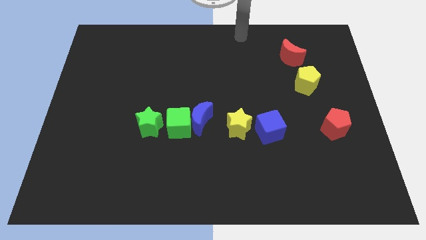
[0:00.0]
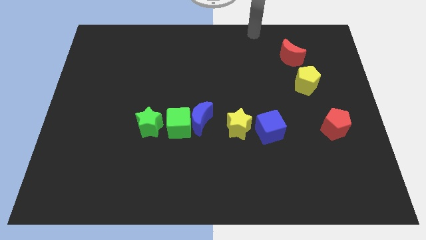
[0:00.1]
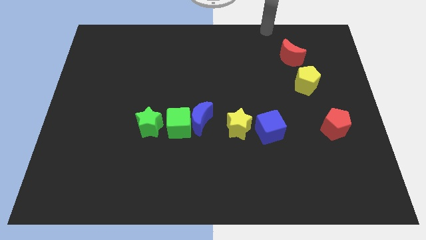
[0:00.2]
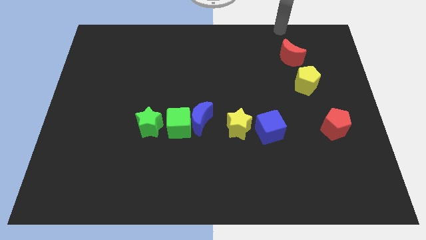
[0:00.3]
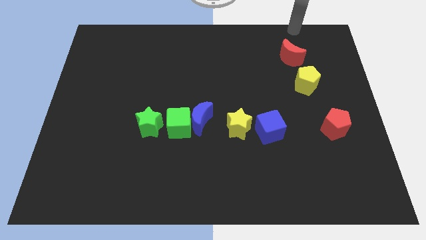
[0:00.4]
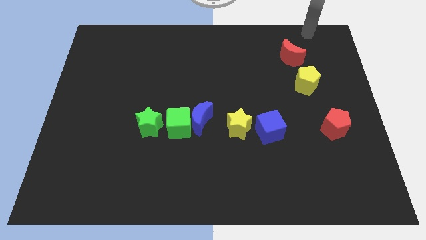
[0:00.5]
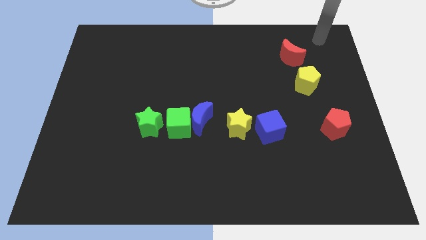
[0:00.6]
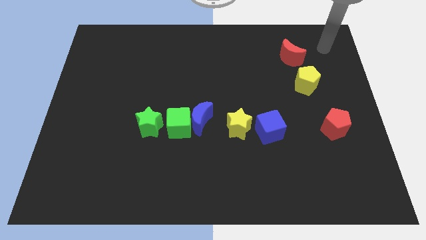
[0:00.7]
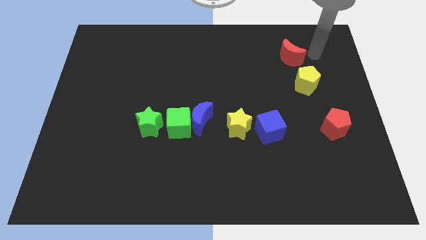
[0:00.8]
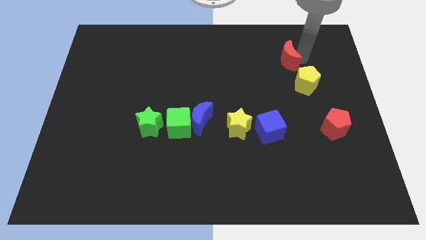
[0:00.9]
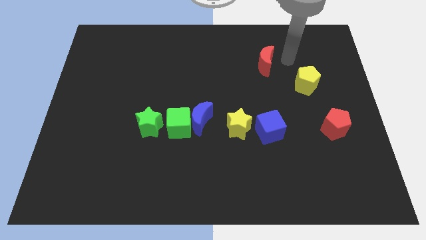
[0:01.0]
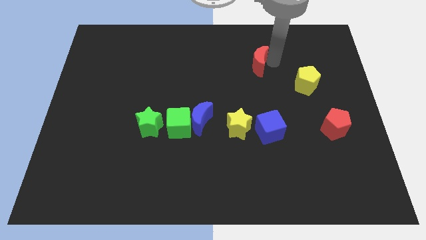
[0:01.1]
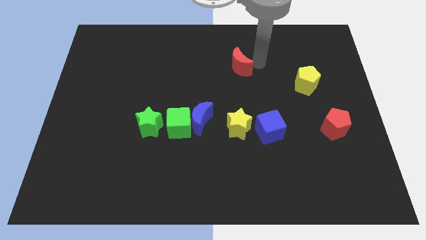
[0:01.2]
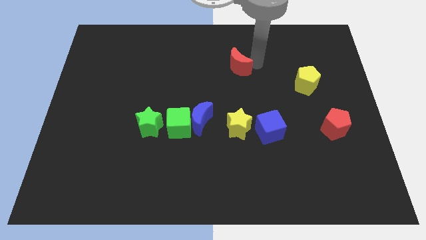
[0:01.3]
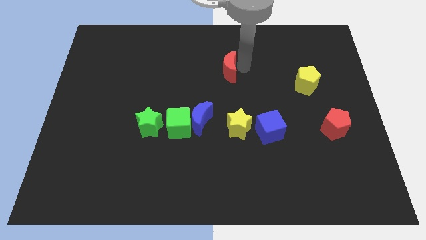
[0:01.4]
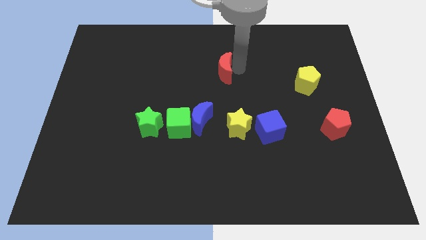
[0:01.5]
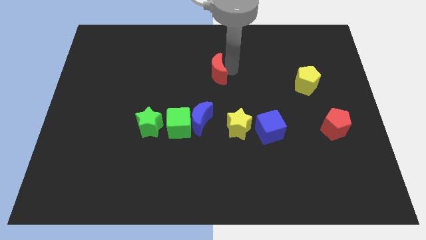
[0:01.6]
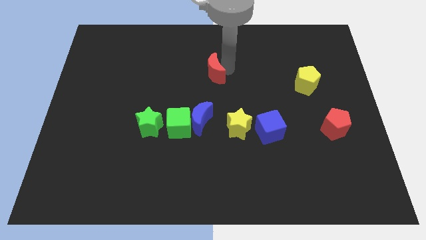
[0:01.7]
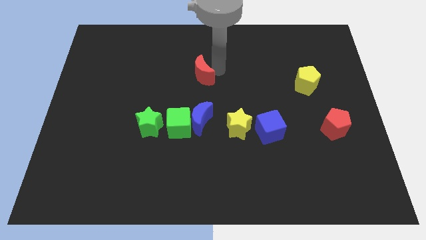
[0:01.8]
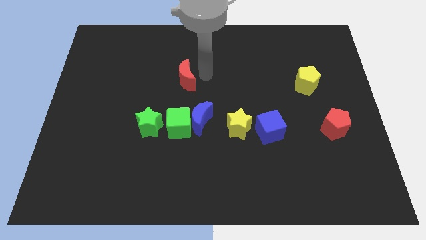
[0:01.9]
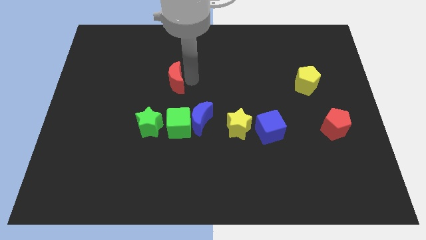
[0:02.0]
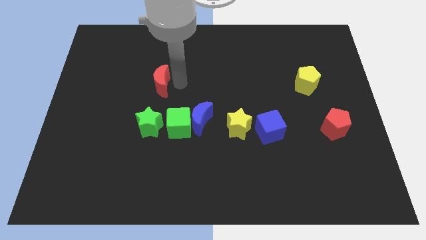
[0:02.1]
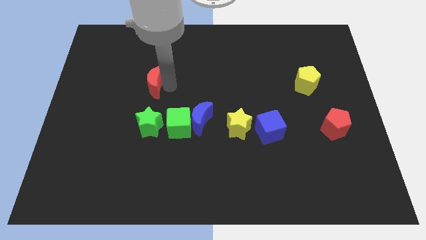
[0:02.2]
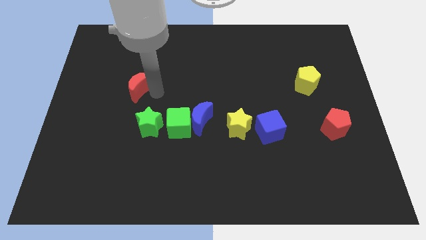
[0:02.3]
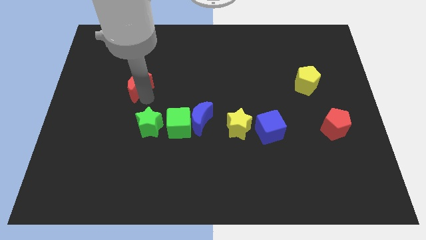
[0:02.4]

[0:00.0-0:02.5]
move red moon above green star

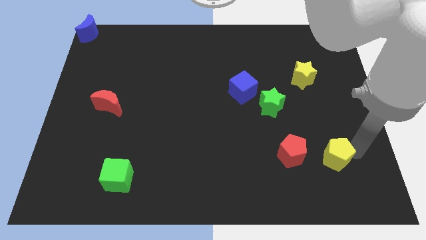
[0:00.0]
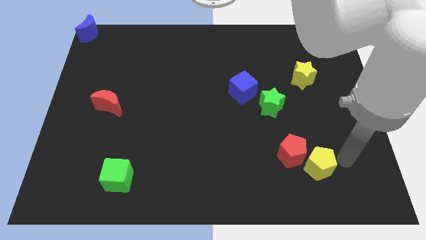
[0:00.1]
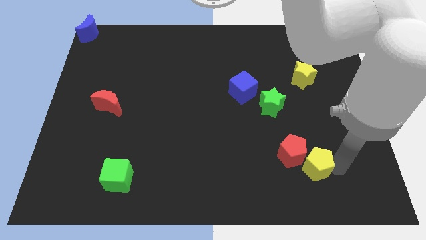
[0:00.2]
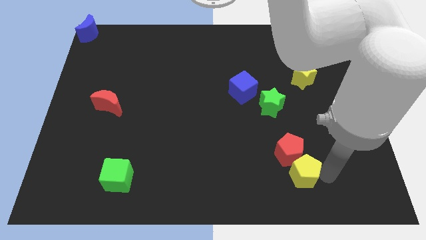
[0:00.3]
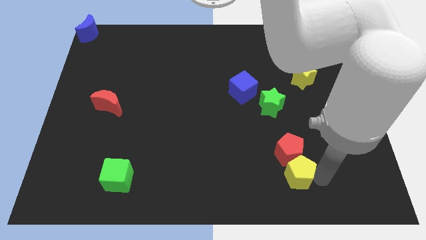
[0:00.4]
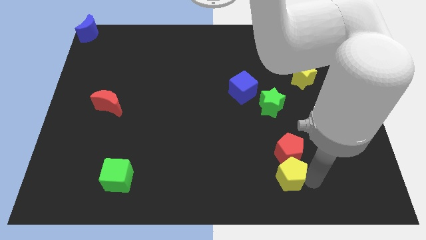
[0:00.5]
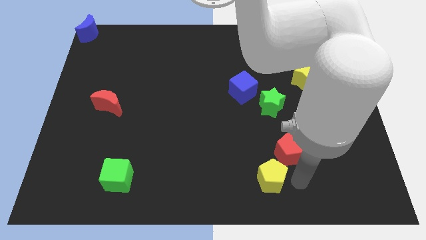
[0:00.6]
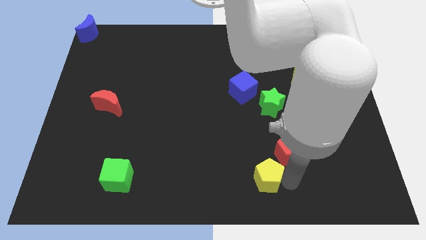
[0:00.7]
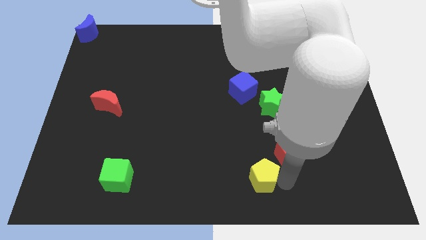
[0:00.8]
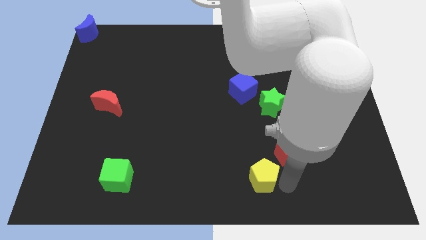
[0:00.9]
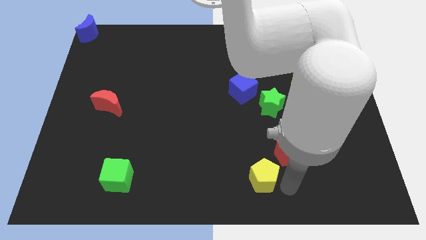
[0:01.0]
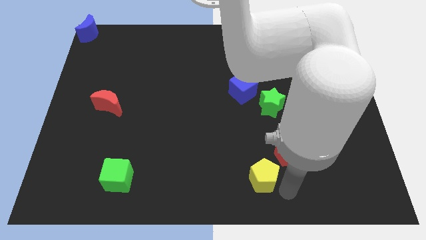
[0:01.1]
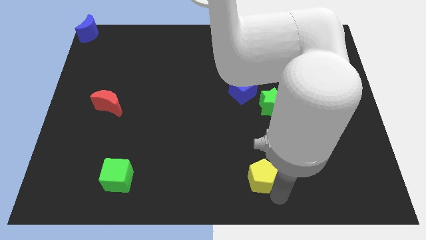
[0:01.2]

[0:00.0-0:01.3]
slide the yellow pentagon diagonally bottom left to the red pentagon

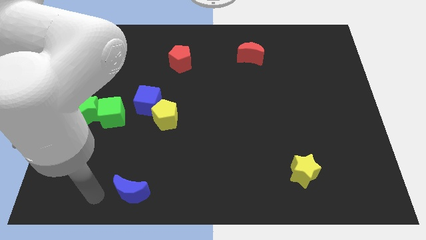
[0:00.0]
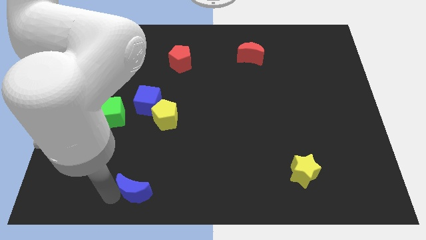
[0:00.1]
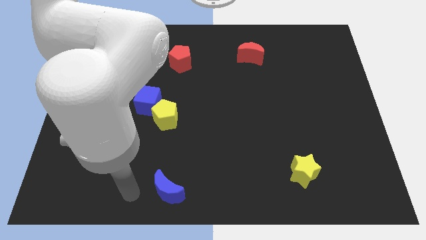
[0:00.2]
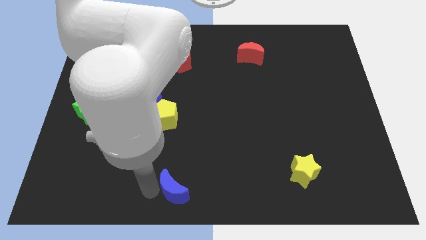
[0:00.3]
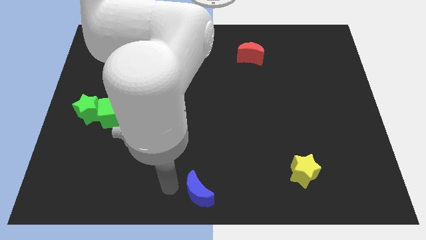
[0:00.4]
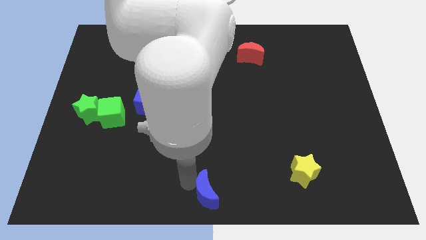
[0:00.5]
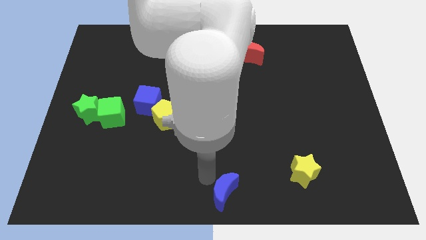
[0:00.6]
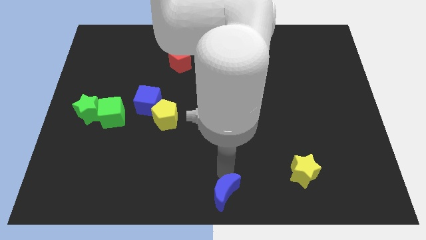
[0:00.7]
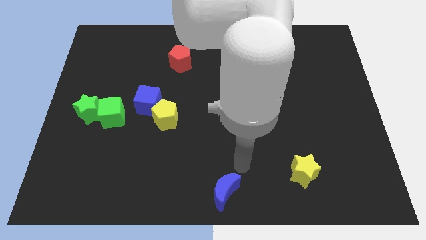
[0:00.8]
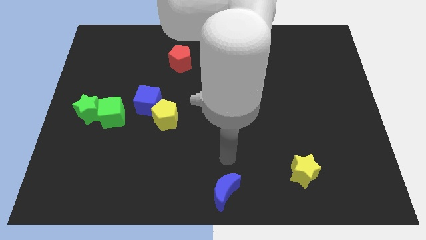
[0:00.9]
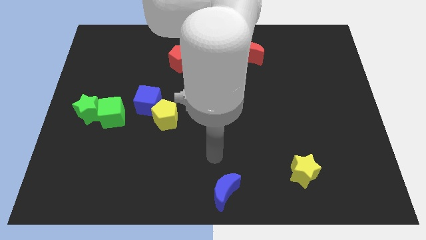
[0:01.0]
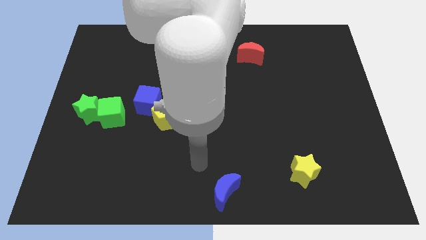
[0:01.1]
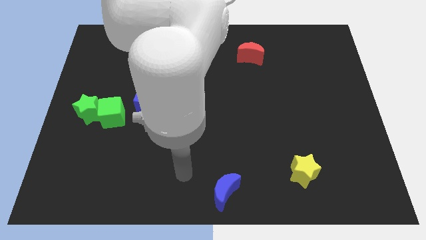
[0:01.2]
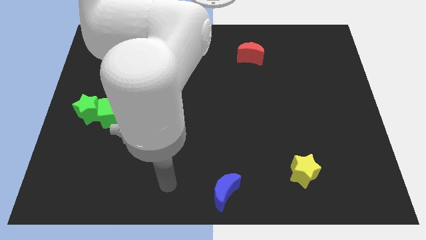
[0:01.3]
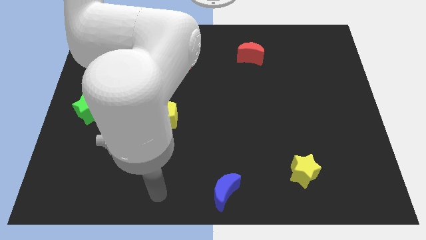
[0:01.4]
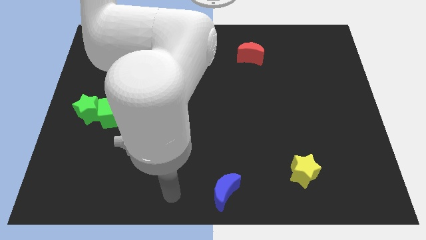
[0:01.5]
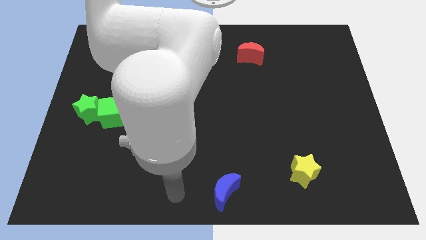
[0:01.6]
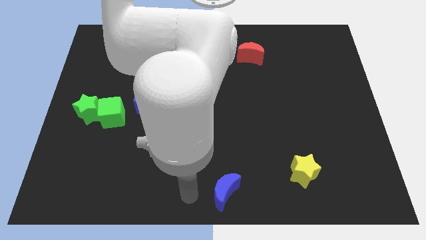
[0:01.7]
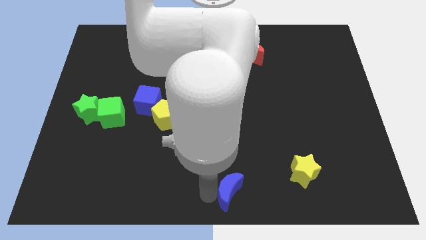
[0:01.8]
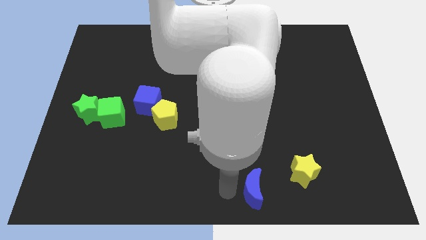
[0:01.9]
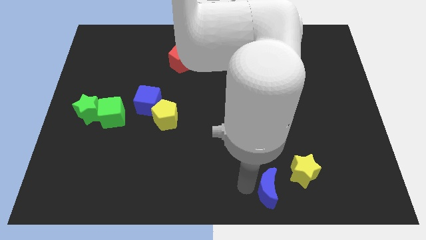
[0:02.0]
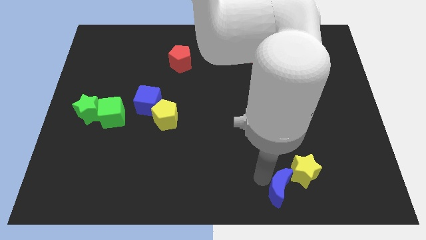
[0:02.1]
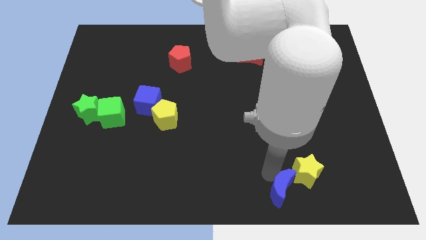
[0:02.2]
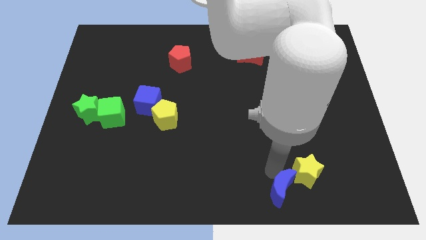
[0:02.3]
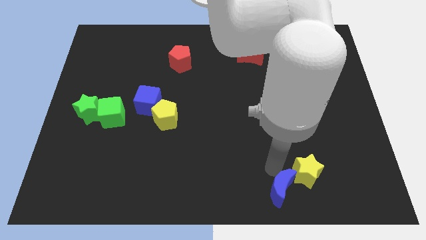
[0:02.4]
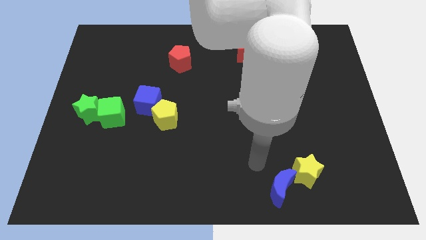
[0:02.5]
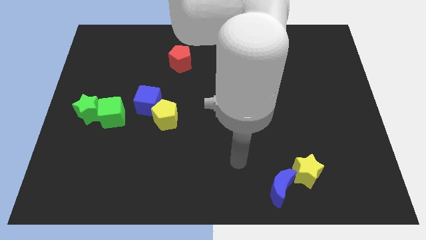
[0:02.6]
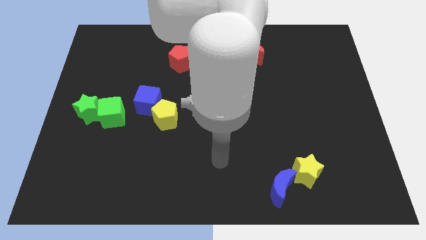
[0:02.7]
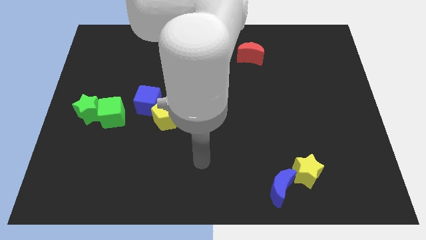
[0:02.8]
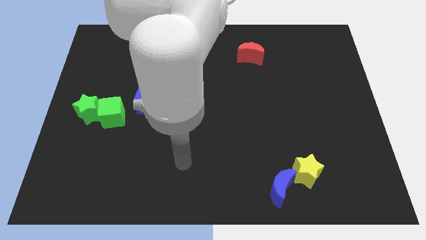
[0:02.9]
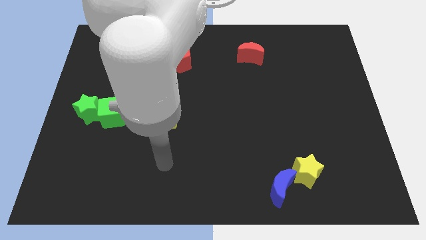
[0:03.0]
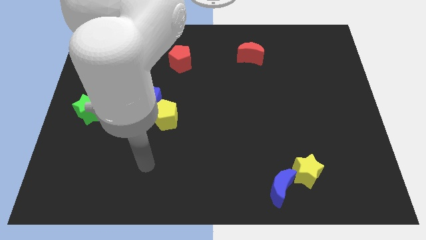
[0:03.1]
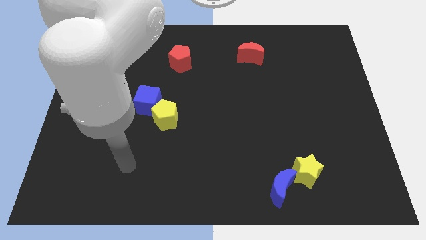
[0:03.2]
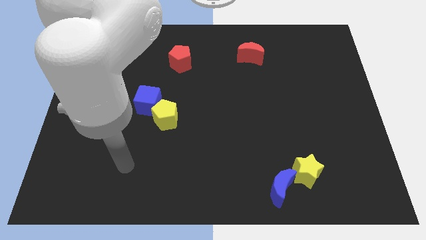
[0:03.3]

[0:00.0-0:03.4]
attach blue crescent to the yellow star

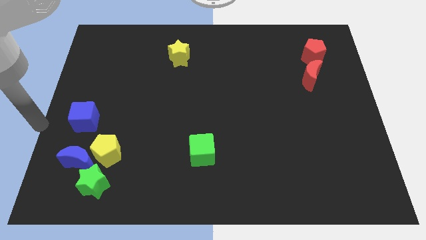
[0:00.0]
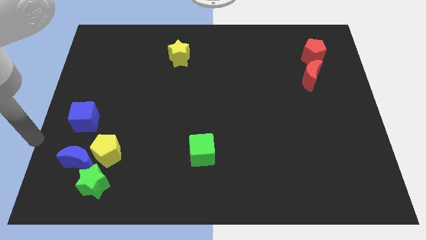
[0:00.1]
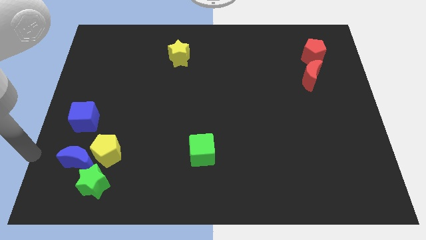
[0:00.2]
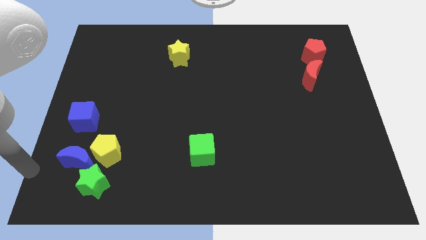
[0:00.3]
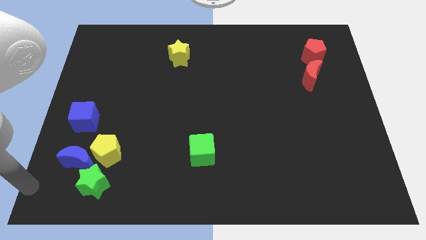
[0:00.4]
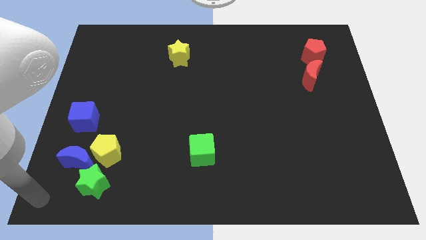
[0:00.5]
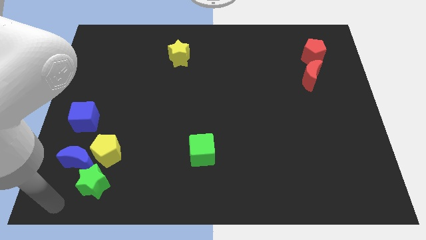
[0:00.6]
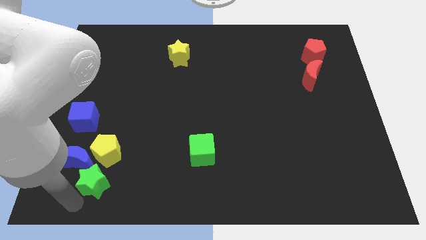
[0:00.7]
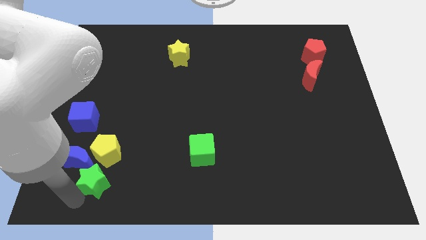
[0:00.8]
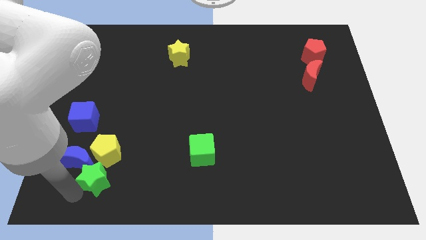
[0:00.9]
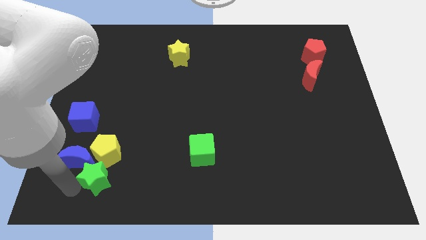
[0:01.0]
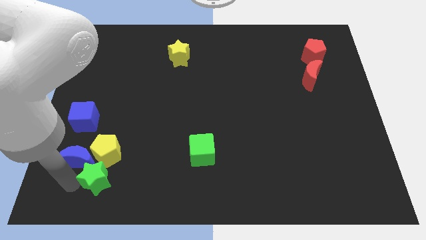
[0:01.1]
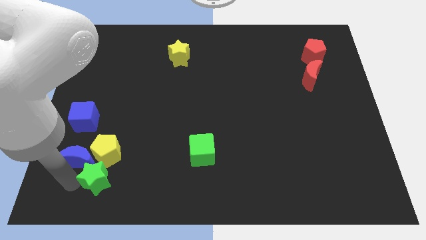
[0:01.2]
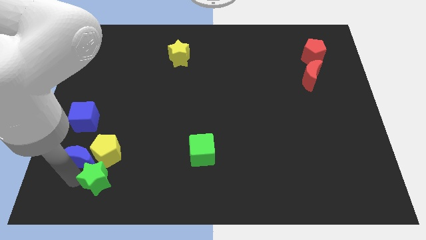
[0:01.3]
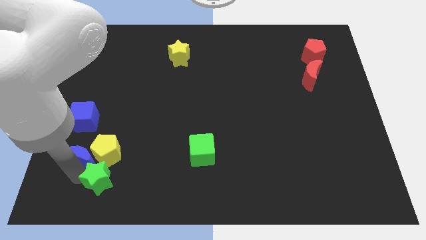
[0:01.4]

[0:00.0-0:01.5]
touch the left of green star

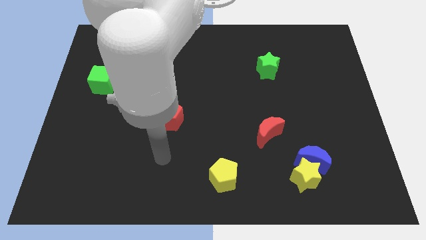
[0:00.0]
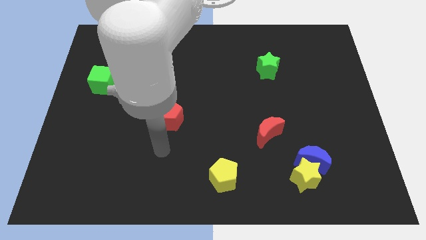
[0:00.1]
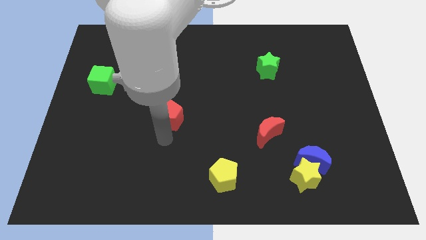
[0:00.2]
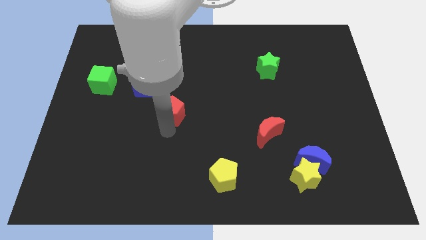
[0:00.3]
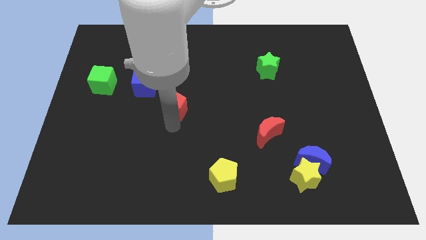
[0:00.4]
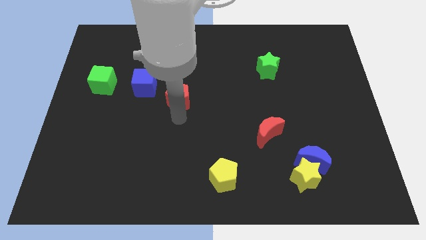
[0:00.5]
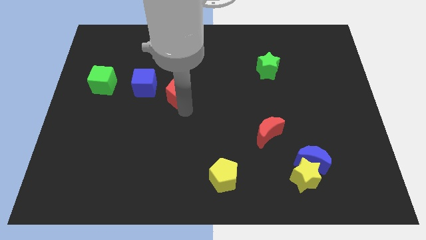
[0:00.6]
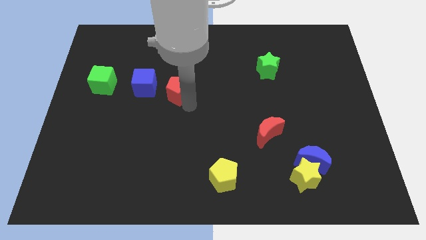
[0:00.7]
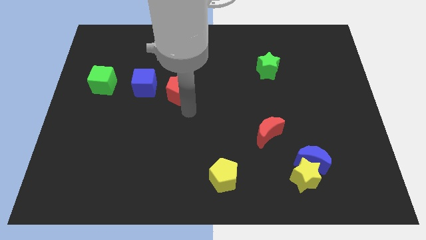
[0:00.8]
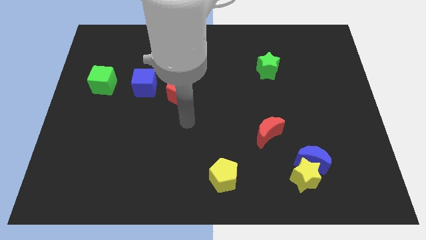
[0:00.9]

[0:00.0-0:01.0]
place the red pentagon to the right of blue cube
